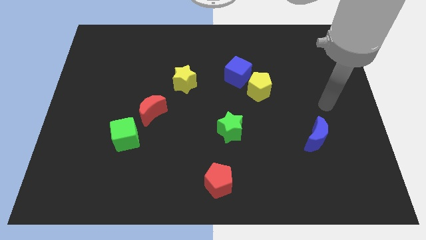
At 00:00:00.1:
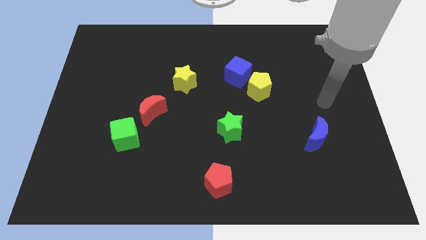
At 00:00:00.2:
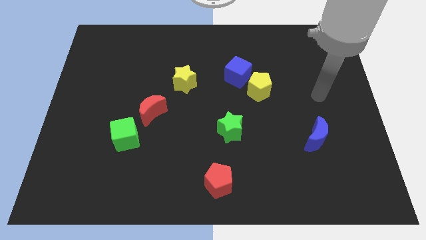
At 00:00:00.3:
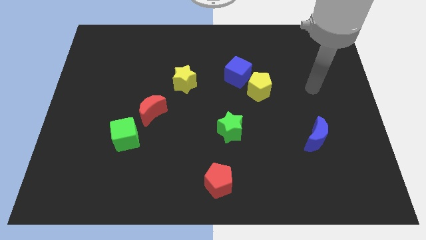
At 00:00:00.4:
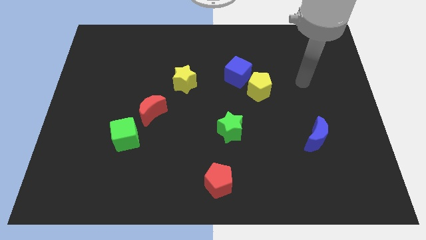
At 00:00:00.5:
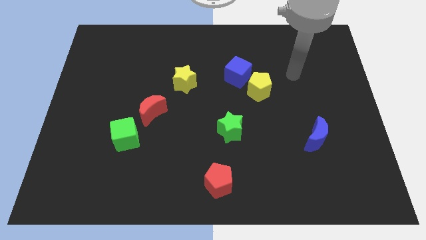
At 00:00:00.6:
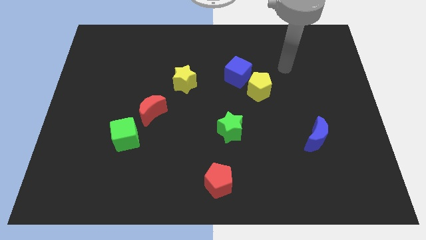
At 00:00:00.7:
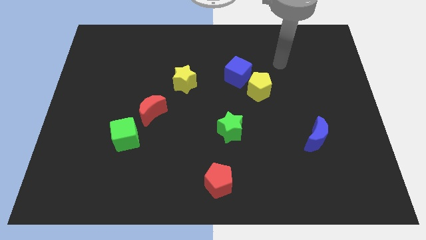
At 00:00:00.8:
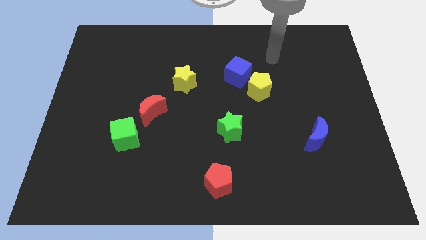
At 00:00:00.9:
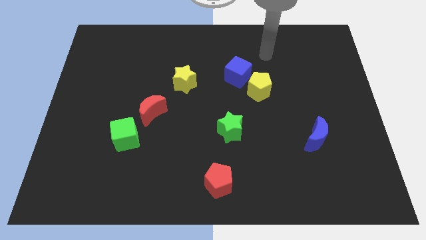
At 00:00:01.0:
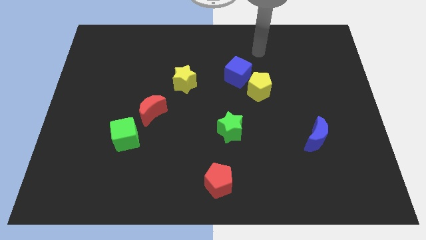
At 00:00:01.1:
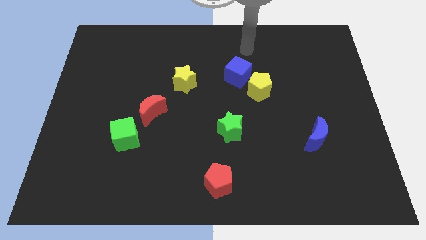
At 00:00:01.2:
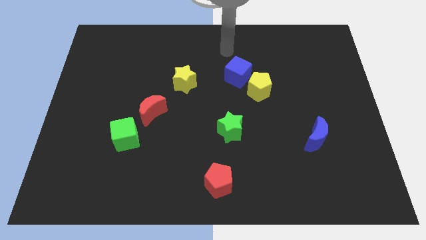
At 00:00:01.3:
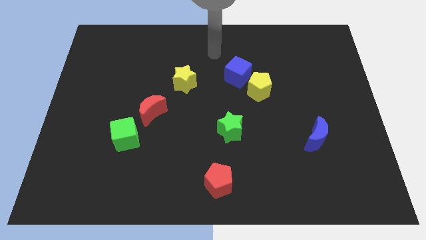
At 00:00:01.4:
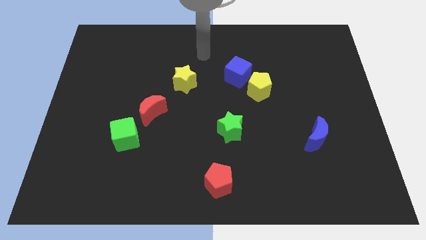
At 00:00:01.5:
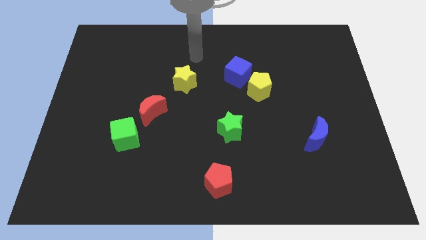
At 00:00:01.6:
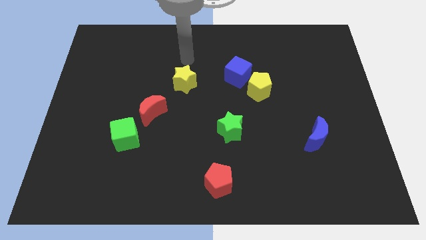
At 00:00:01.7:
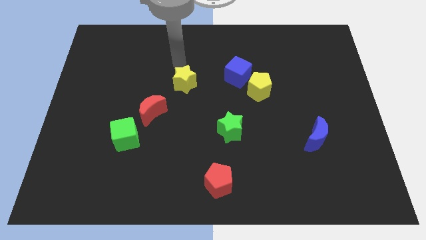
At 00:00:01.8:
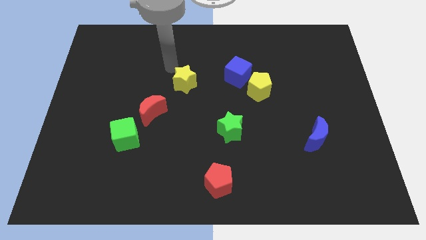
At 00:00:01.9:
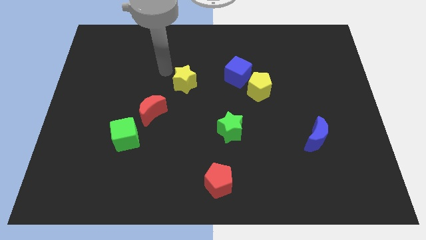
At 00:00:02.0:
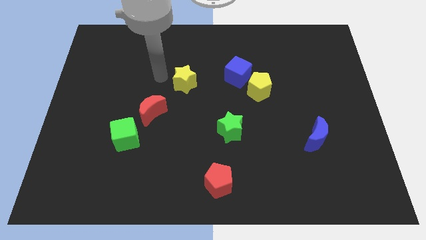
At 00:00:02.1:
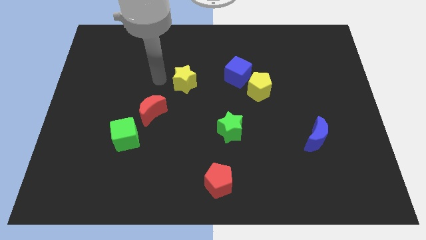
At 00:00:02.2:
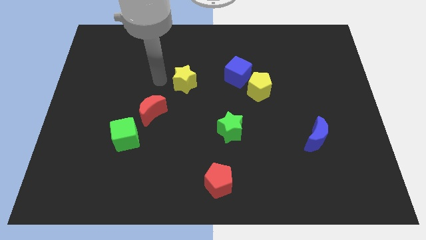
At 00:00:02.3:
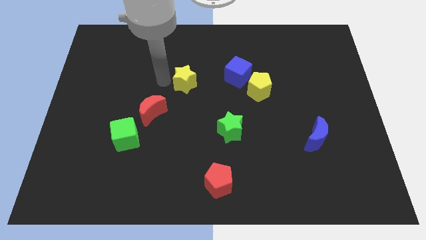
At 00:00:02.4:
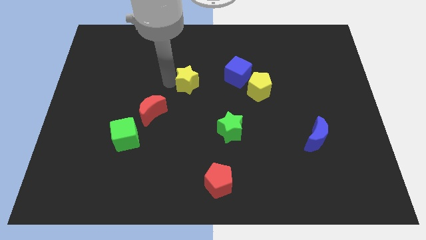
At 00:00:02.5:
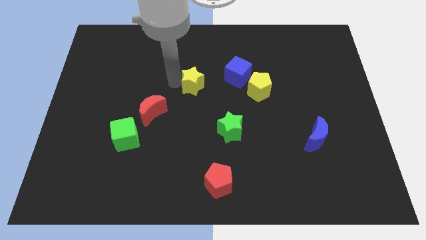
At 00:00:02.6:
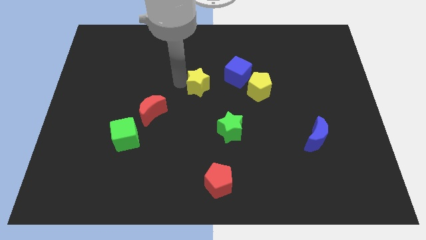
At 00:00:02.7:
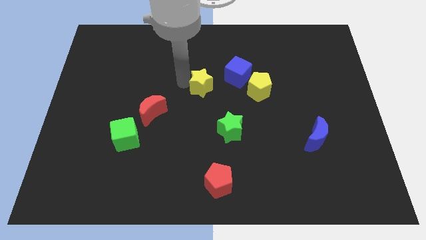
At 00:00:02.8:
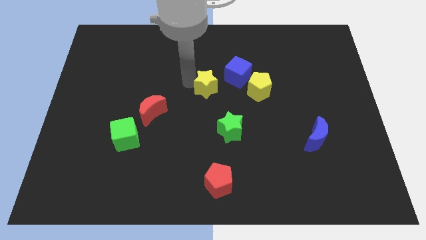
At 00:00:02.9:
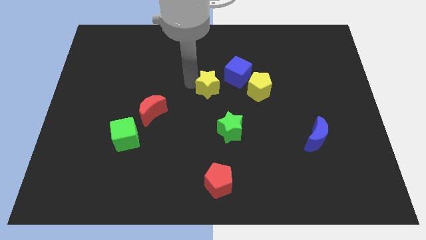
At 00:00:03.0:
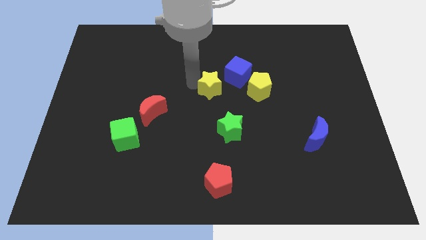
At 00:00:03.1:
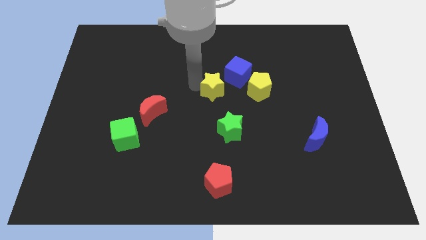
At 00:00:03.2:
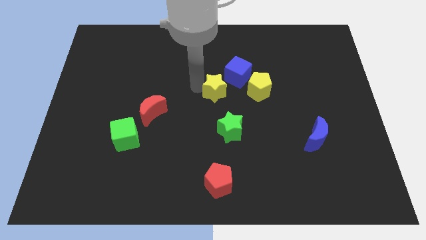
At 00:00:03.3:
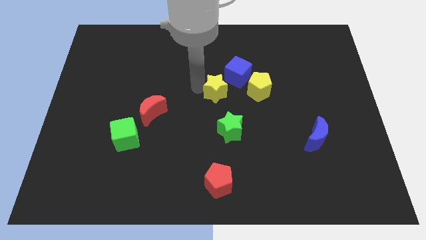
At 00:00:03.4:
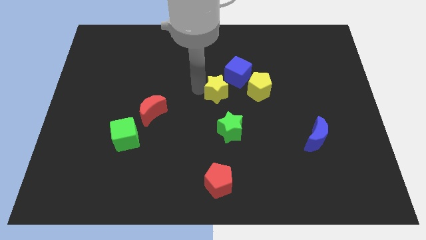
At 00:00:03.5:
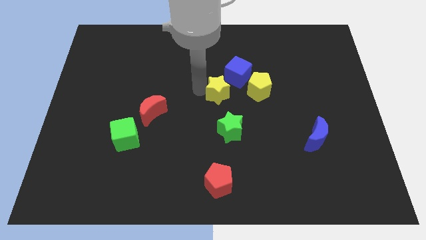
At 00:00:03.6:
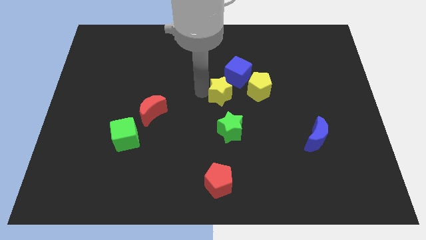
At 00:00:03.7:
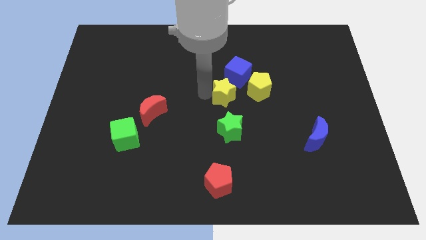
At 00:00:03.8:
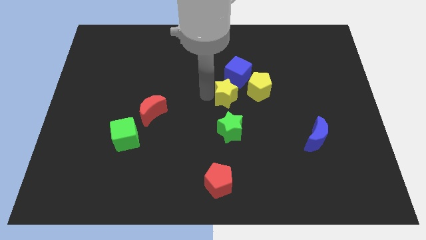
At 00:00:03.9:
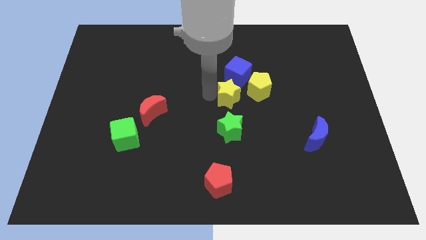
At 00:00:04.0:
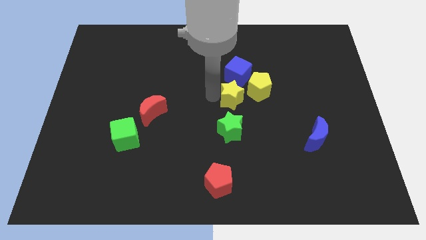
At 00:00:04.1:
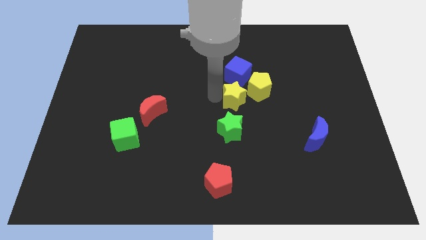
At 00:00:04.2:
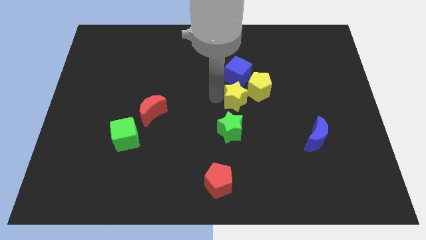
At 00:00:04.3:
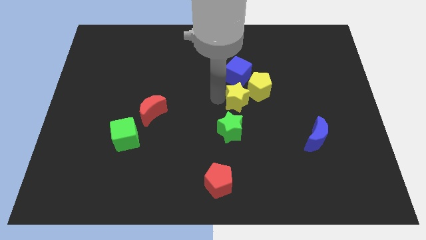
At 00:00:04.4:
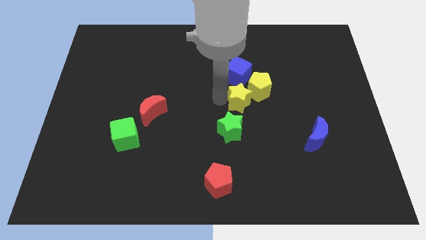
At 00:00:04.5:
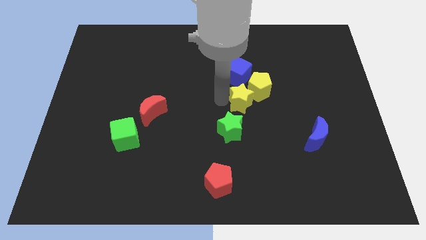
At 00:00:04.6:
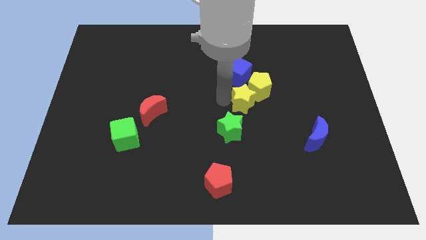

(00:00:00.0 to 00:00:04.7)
slide the yellow star towards the yellow pentagon

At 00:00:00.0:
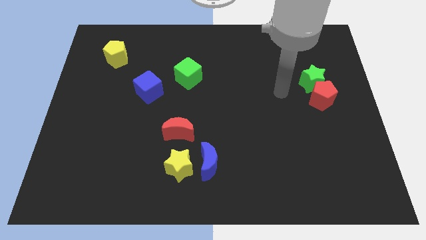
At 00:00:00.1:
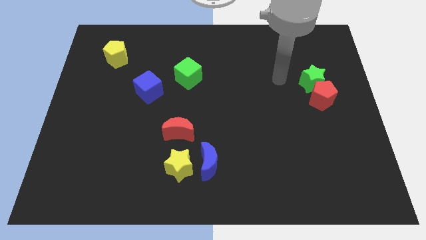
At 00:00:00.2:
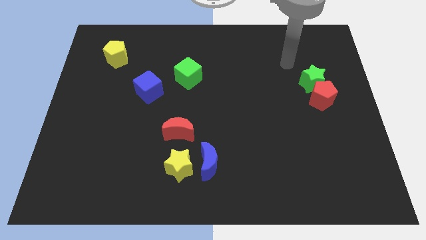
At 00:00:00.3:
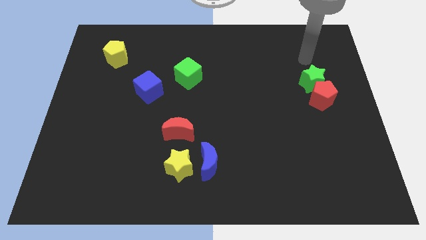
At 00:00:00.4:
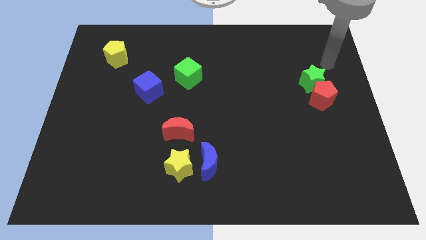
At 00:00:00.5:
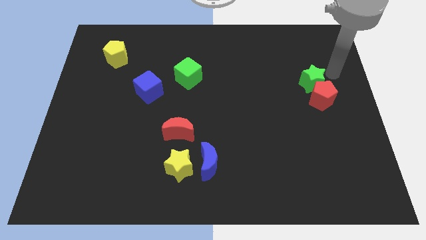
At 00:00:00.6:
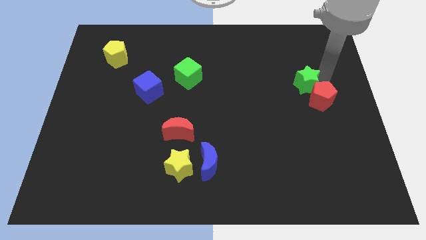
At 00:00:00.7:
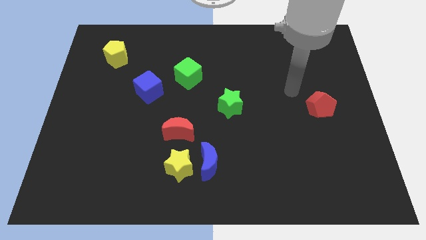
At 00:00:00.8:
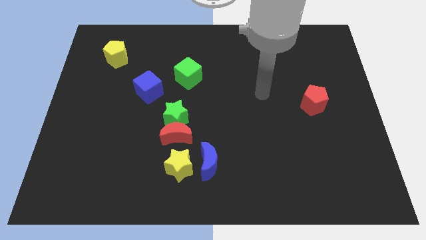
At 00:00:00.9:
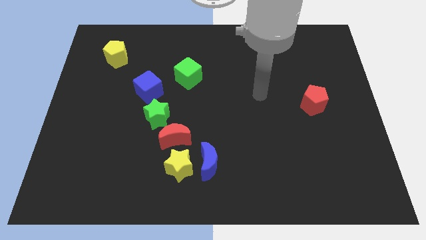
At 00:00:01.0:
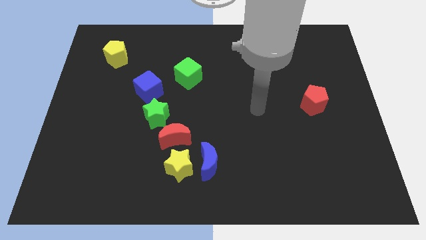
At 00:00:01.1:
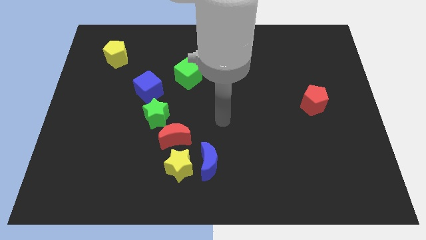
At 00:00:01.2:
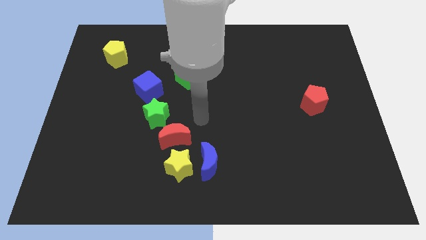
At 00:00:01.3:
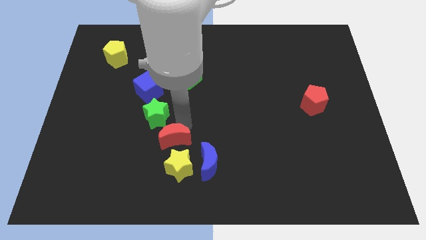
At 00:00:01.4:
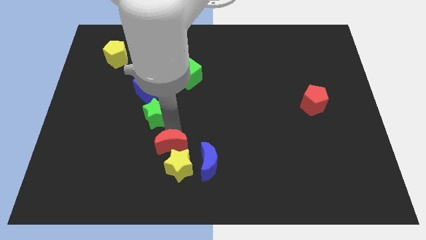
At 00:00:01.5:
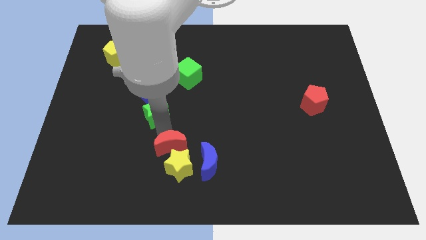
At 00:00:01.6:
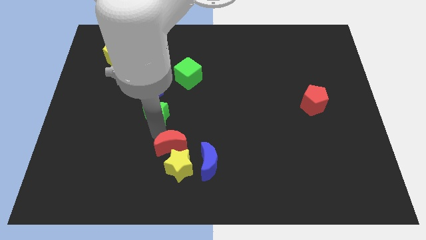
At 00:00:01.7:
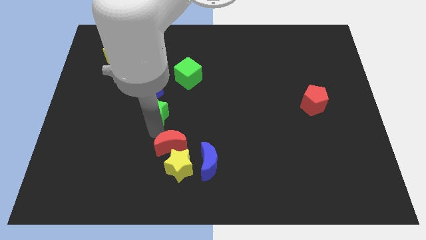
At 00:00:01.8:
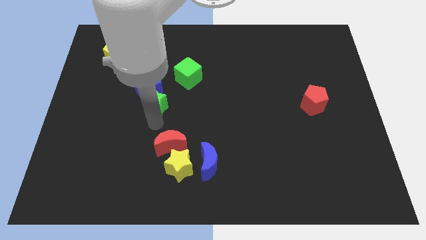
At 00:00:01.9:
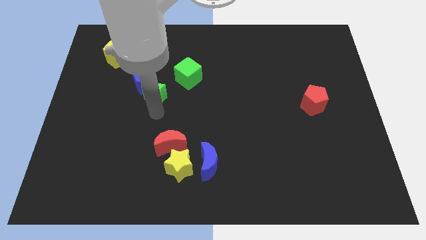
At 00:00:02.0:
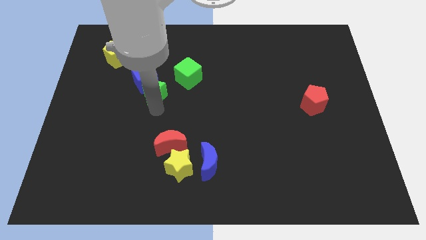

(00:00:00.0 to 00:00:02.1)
put the green star close to the blue cube

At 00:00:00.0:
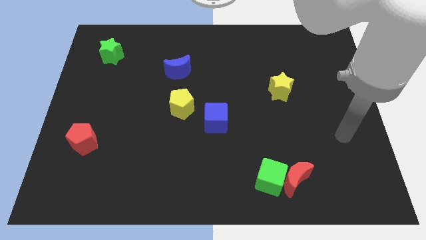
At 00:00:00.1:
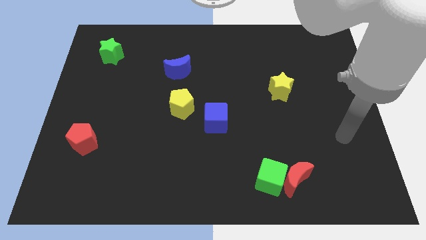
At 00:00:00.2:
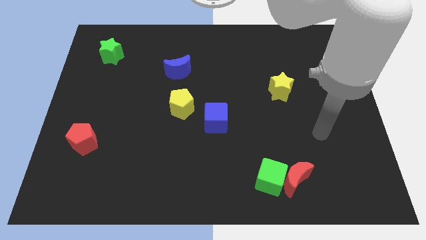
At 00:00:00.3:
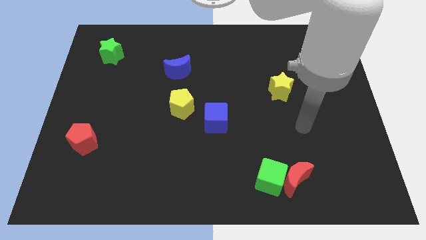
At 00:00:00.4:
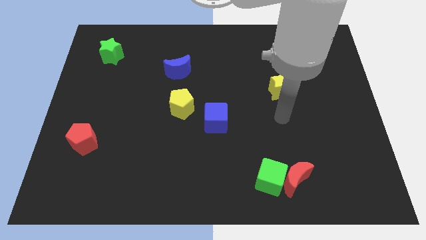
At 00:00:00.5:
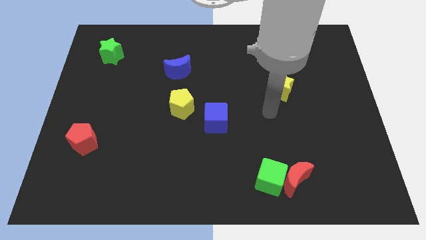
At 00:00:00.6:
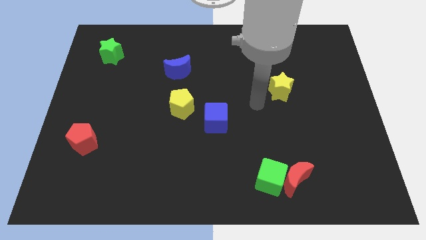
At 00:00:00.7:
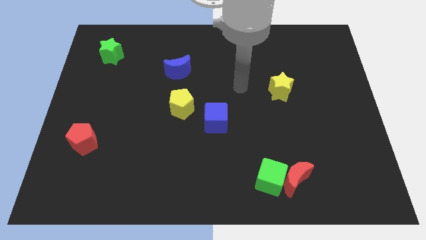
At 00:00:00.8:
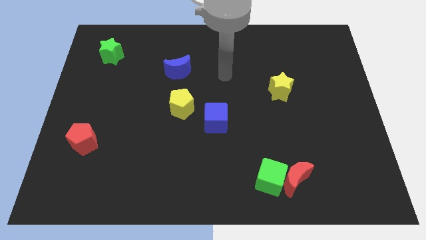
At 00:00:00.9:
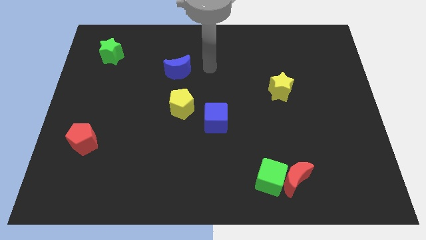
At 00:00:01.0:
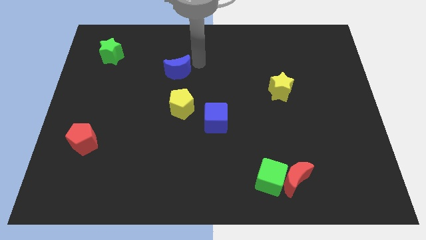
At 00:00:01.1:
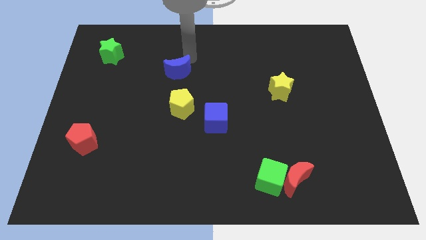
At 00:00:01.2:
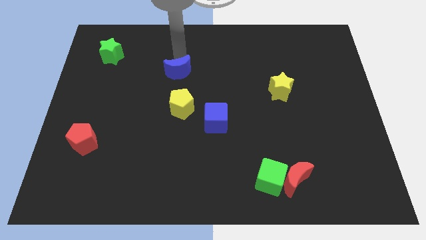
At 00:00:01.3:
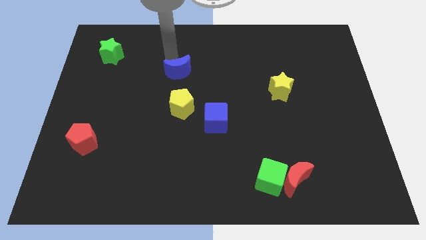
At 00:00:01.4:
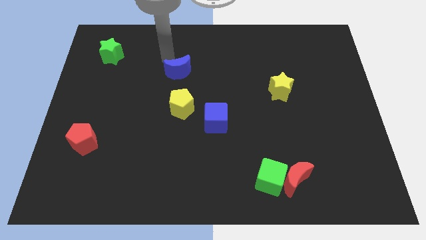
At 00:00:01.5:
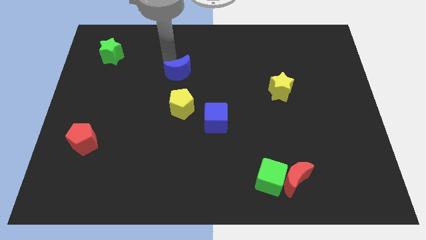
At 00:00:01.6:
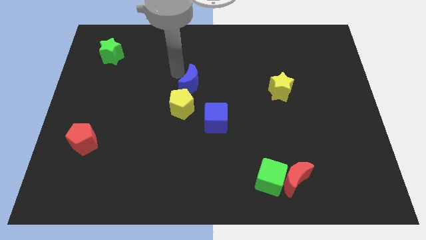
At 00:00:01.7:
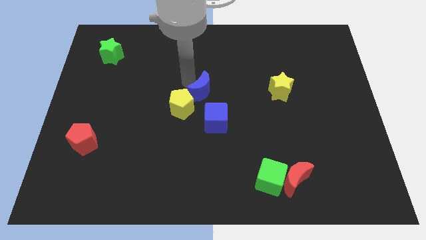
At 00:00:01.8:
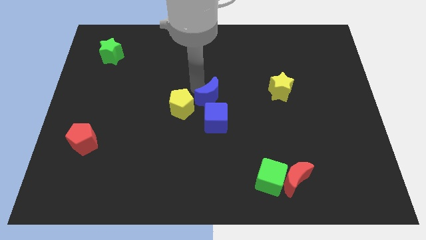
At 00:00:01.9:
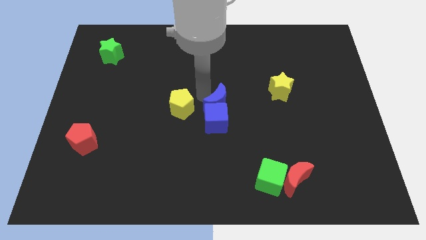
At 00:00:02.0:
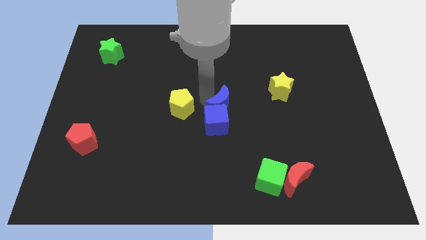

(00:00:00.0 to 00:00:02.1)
move the blue moon next to the blue cube
